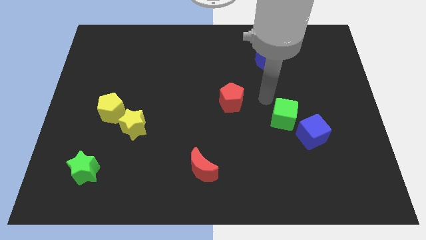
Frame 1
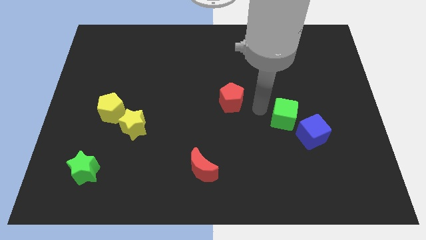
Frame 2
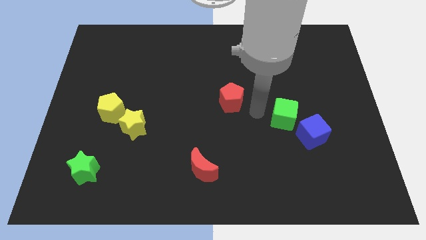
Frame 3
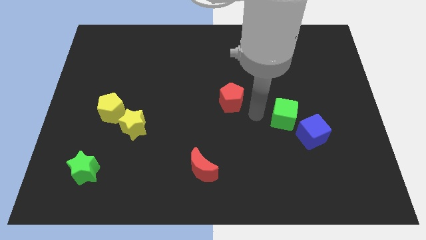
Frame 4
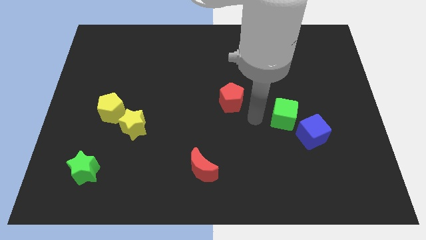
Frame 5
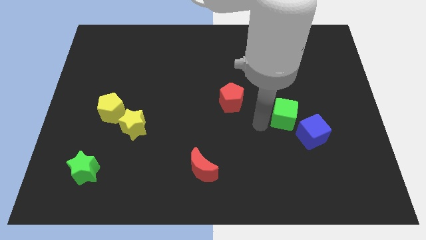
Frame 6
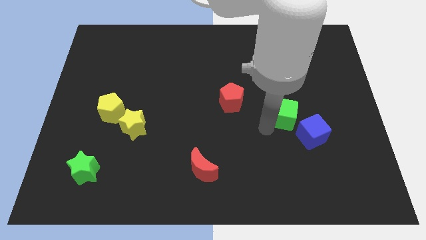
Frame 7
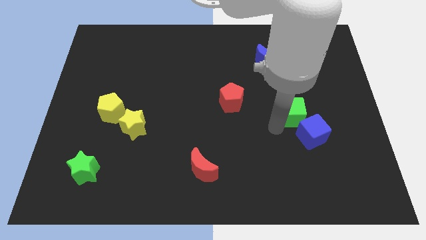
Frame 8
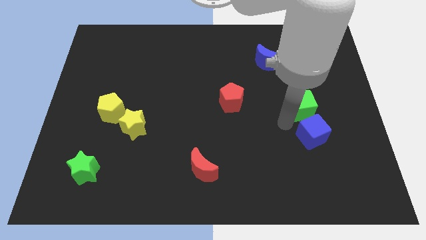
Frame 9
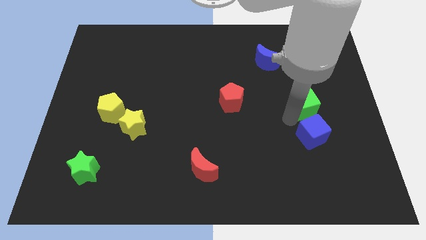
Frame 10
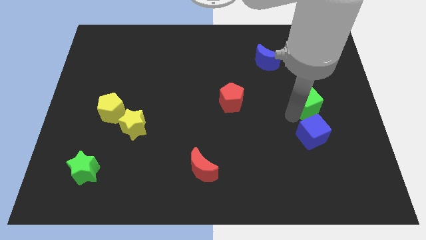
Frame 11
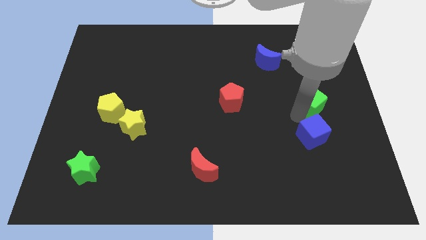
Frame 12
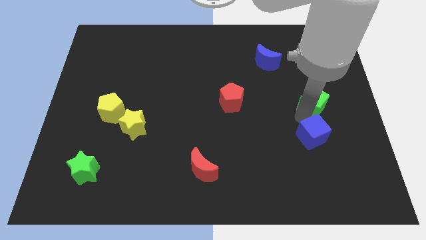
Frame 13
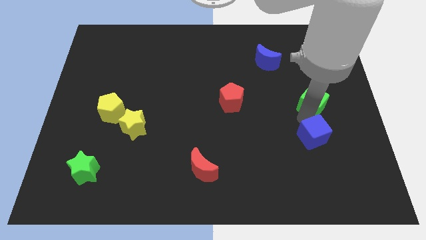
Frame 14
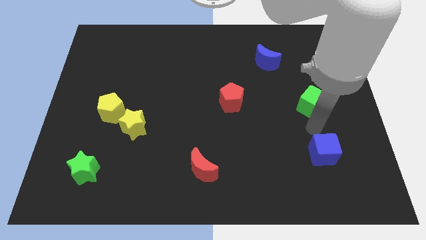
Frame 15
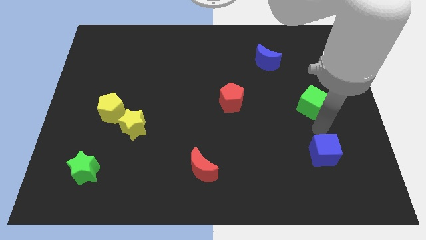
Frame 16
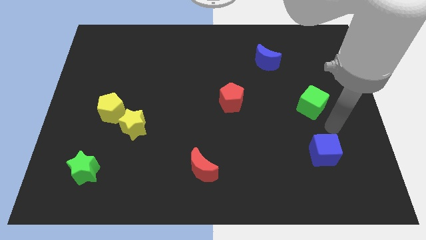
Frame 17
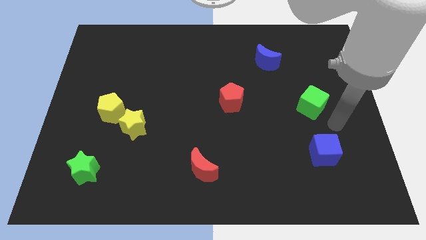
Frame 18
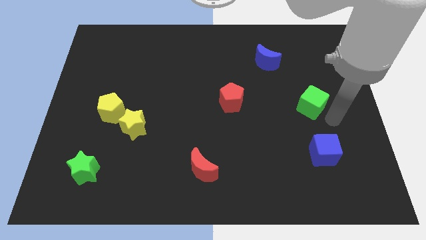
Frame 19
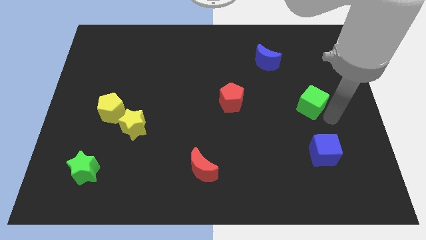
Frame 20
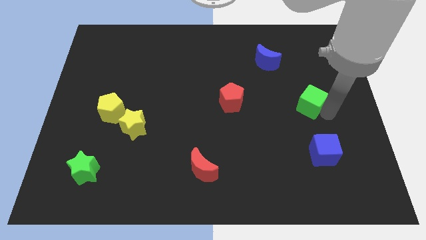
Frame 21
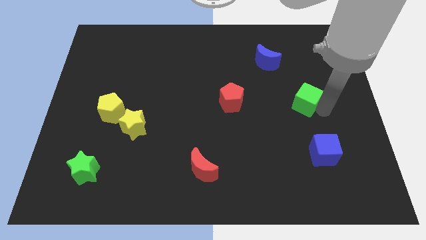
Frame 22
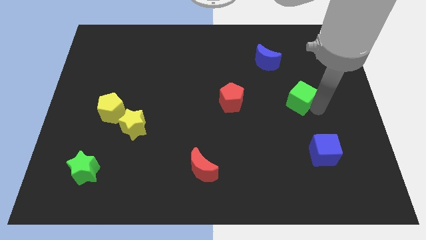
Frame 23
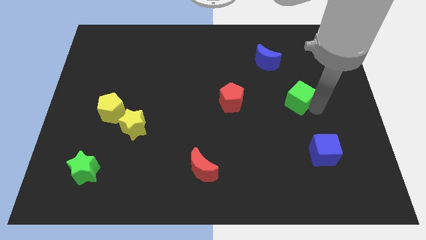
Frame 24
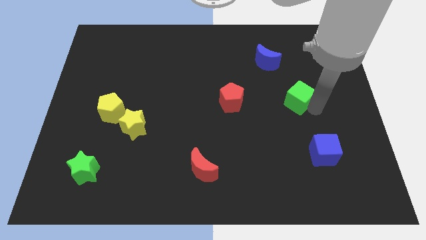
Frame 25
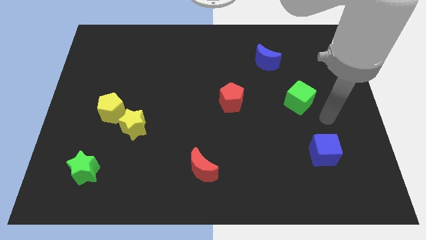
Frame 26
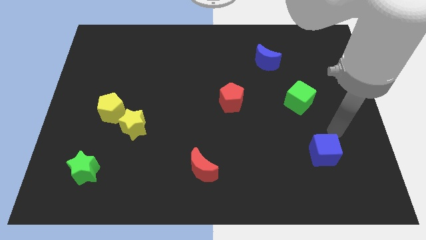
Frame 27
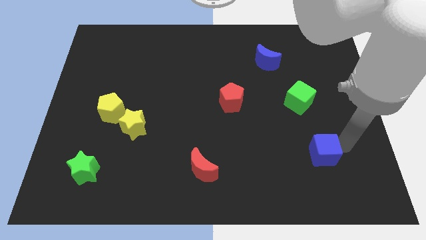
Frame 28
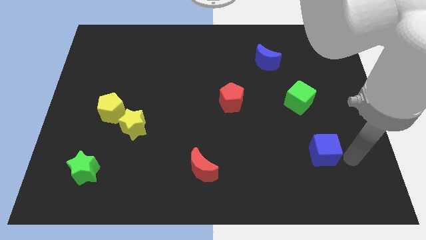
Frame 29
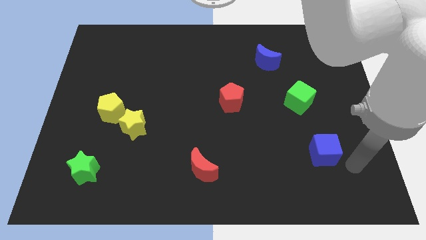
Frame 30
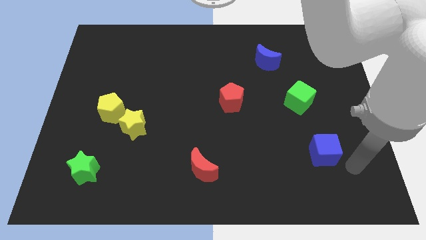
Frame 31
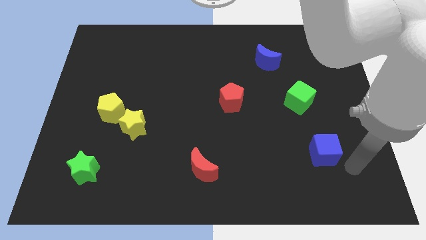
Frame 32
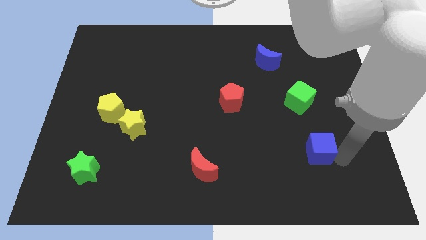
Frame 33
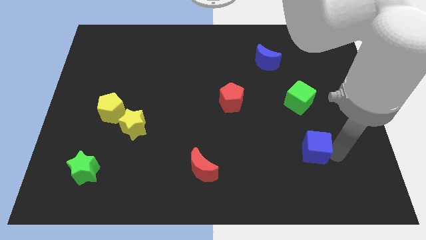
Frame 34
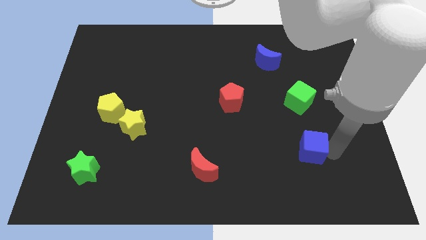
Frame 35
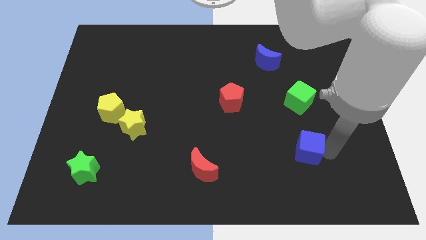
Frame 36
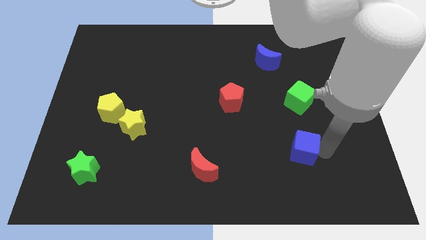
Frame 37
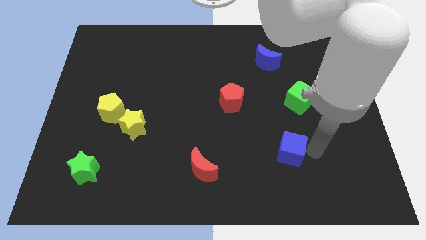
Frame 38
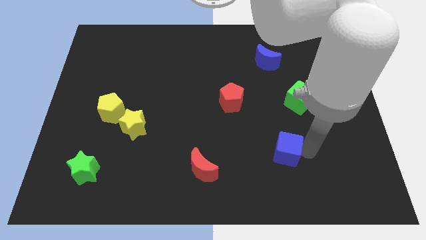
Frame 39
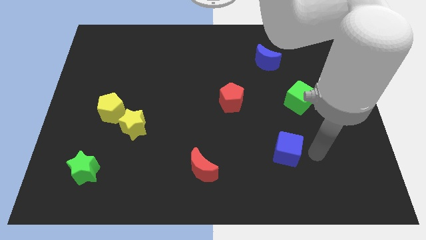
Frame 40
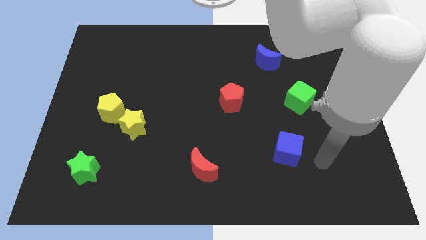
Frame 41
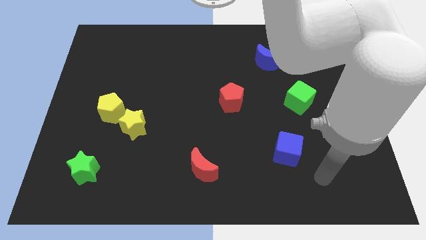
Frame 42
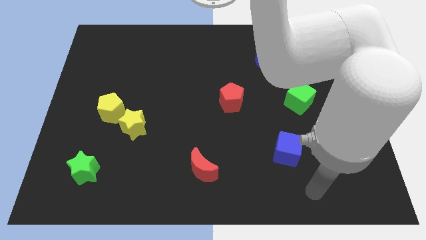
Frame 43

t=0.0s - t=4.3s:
move away the blue cube from the green cube

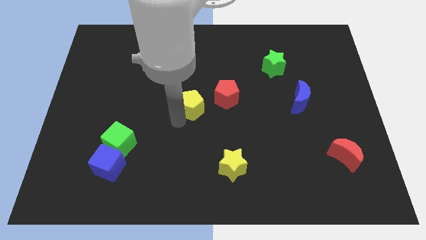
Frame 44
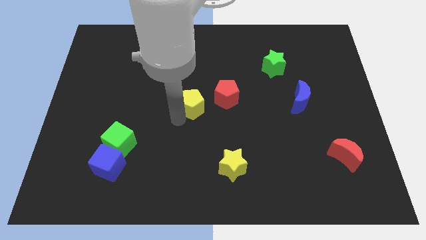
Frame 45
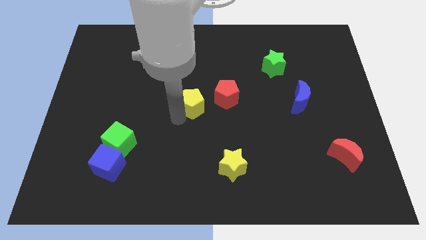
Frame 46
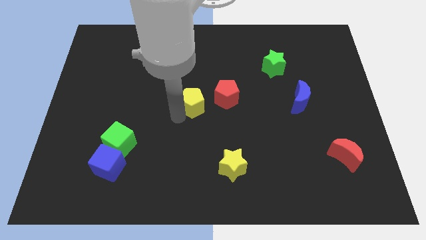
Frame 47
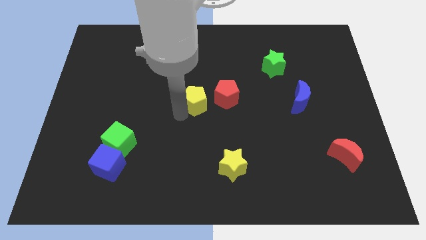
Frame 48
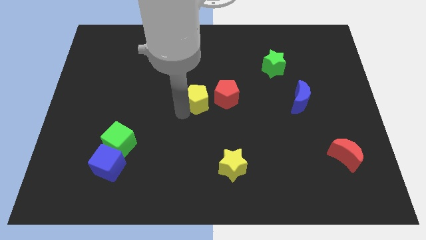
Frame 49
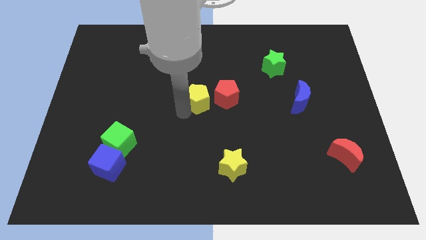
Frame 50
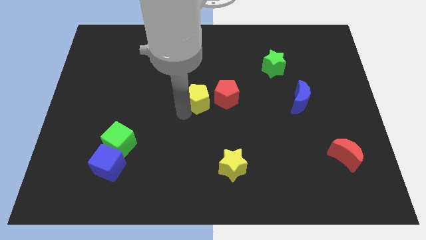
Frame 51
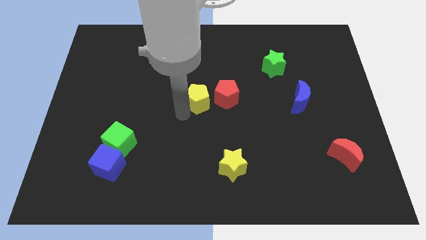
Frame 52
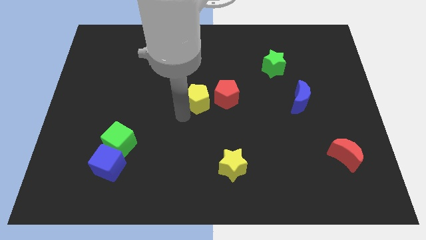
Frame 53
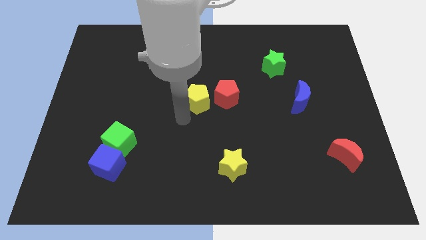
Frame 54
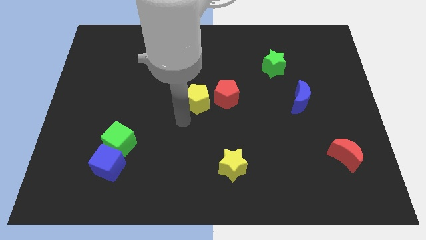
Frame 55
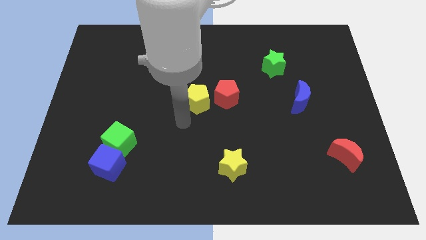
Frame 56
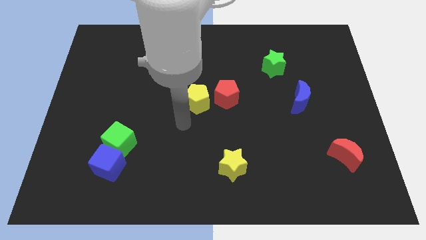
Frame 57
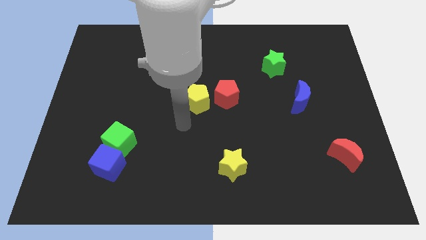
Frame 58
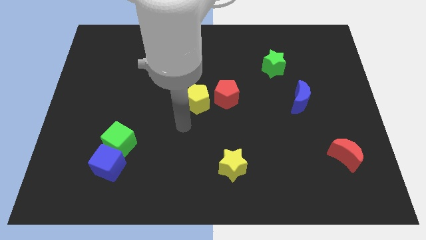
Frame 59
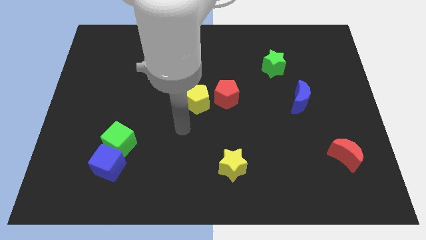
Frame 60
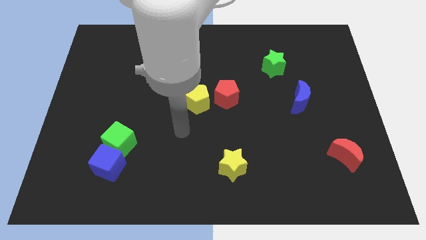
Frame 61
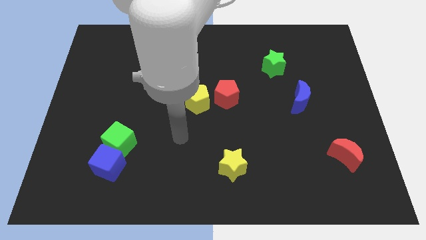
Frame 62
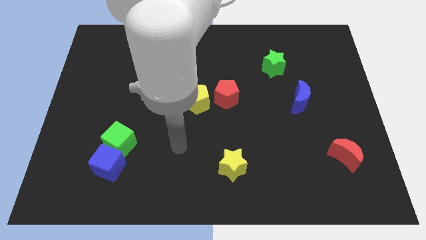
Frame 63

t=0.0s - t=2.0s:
place yellow pentagon to the left of red pentagon

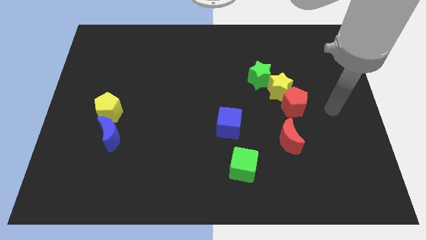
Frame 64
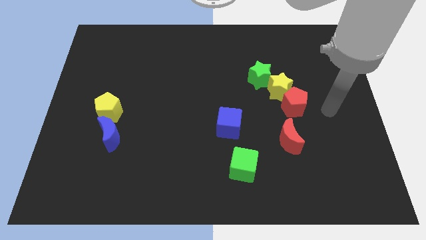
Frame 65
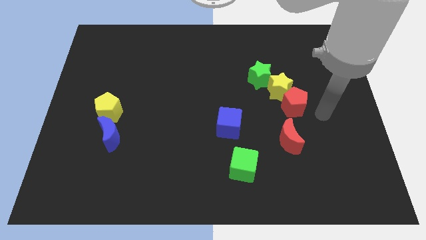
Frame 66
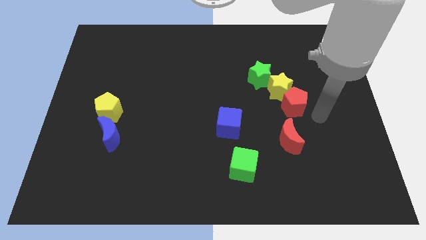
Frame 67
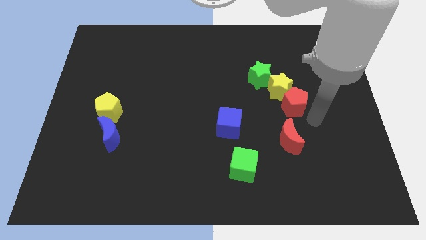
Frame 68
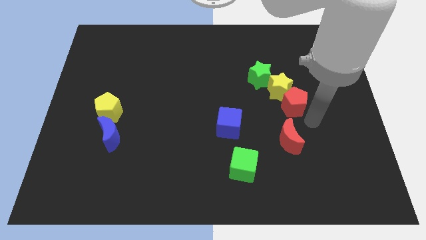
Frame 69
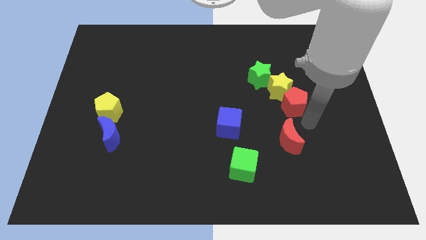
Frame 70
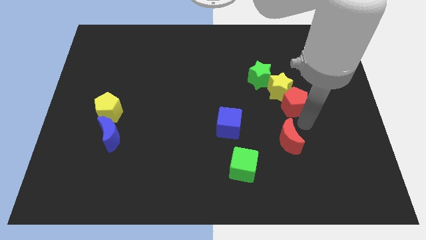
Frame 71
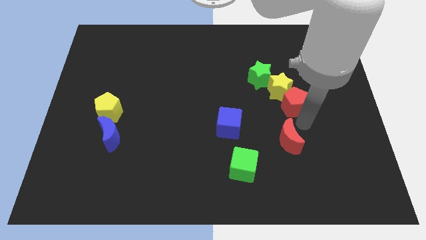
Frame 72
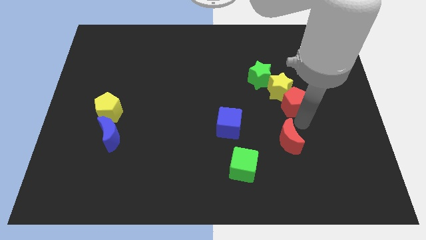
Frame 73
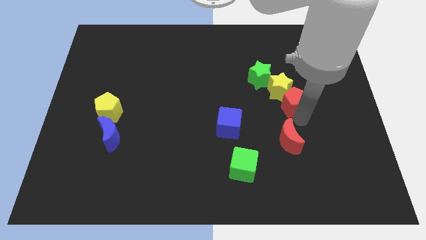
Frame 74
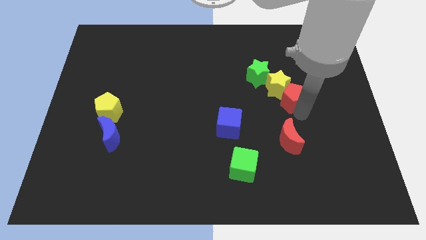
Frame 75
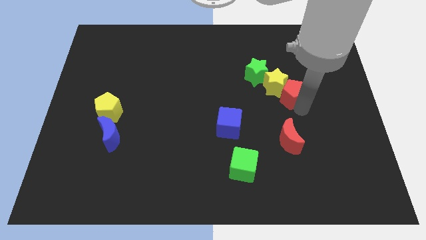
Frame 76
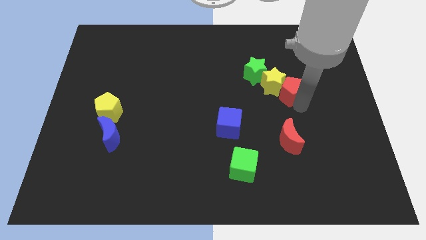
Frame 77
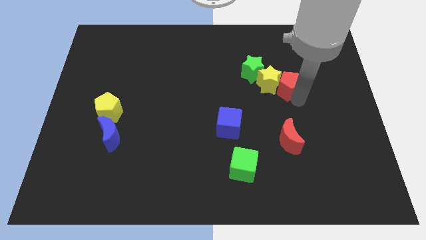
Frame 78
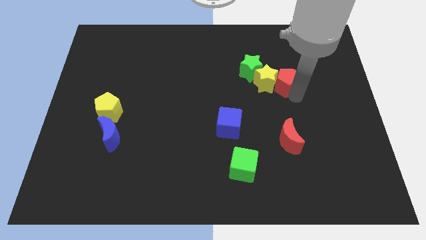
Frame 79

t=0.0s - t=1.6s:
push red pentagon along with the yellow star and green star towards the top of the board

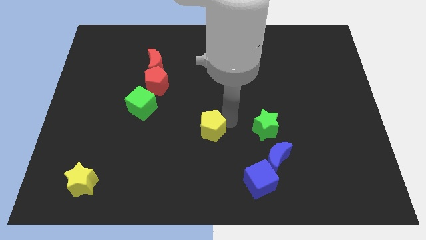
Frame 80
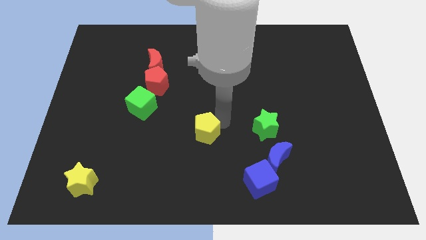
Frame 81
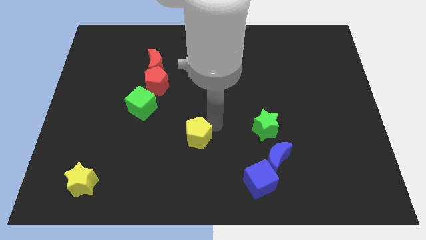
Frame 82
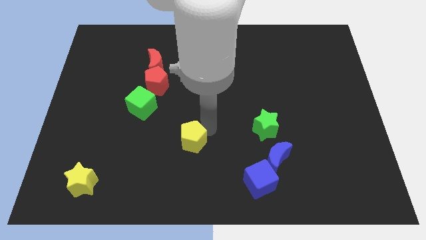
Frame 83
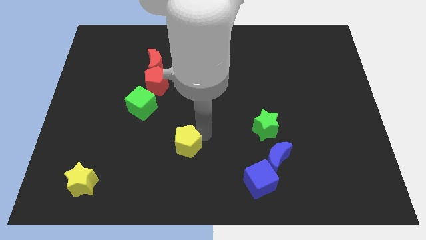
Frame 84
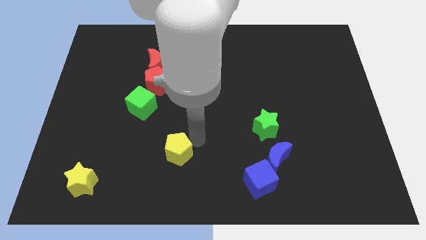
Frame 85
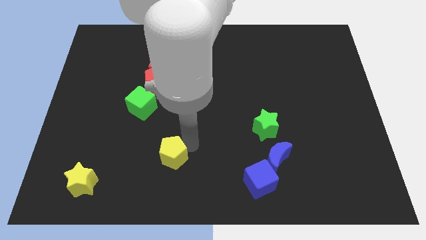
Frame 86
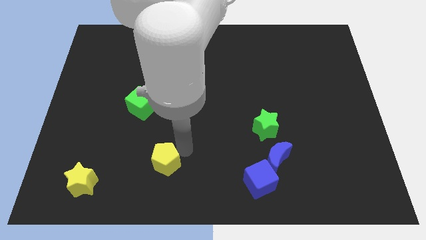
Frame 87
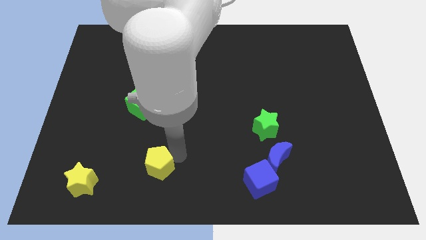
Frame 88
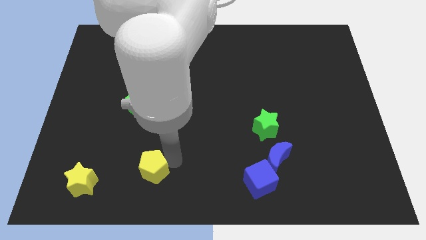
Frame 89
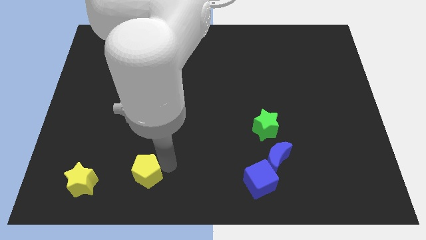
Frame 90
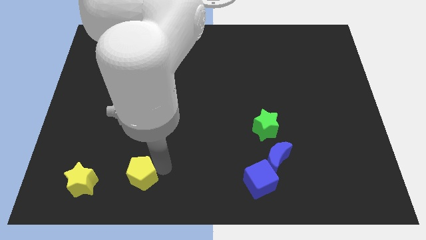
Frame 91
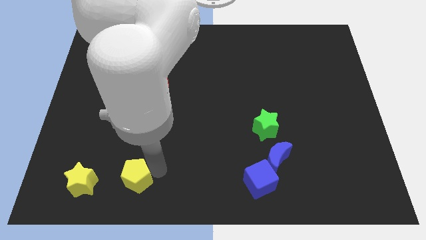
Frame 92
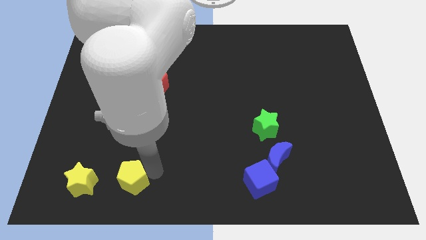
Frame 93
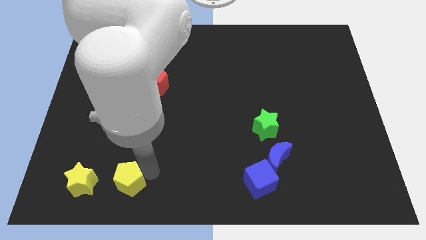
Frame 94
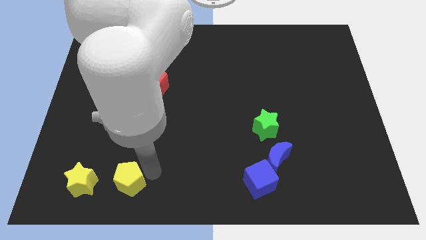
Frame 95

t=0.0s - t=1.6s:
move the yellow pentagon right to the yellow star
